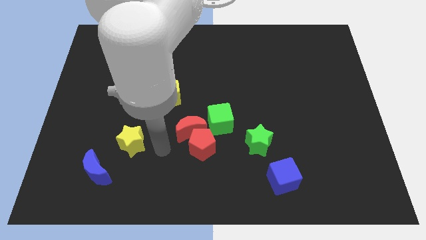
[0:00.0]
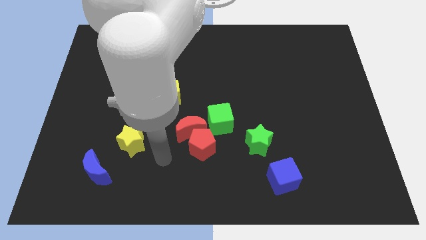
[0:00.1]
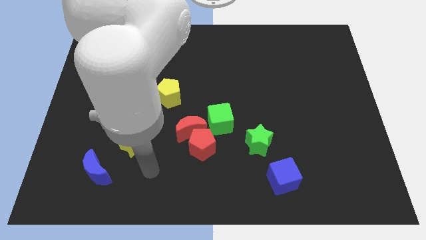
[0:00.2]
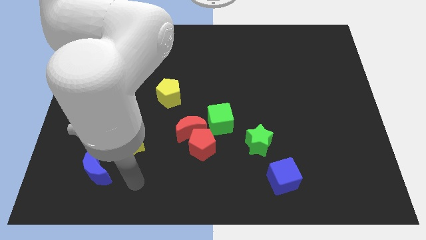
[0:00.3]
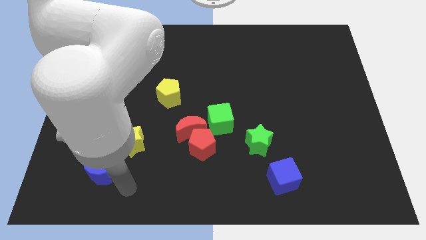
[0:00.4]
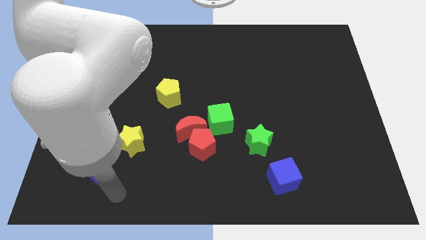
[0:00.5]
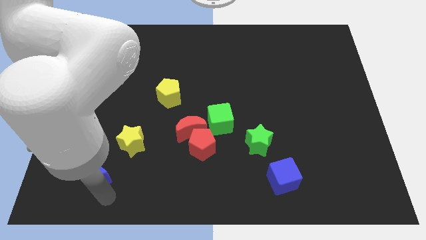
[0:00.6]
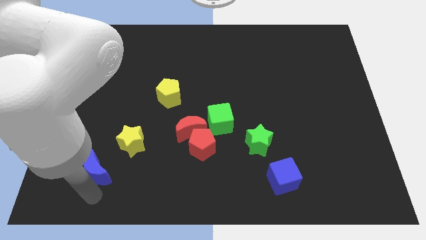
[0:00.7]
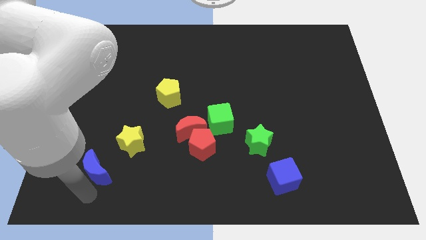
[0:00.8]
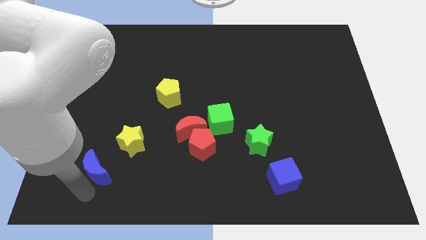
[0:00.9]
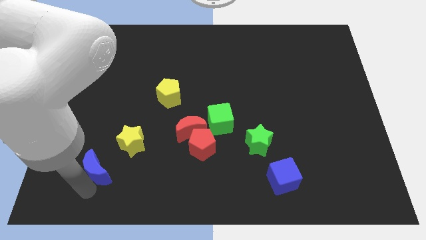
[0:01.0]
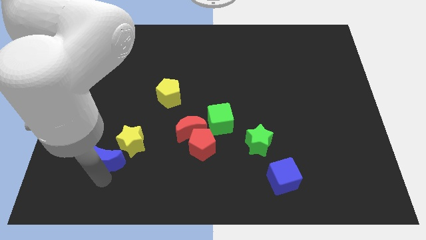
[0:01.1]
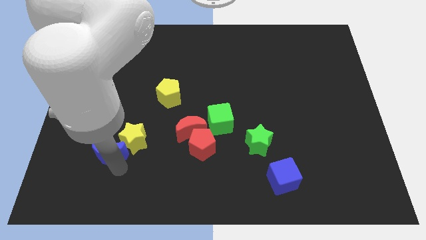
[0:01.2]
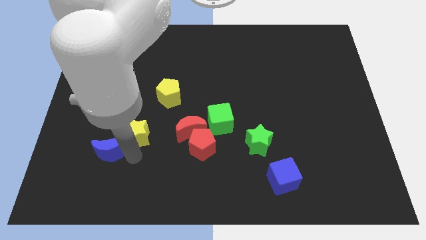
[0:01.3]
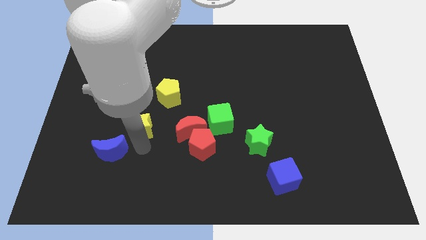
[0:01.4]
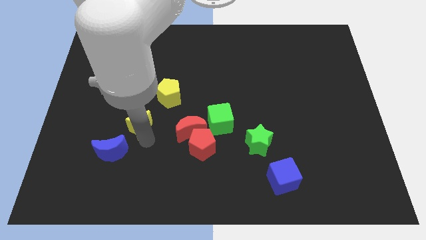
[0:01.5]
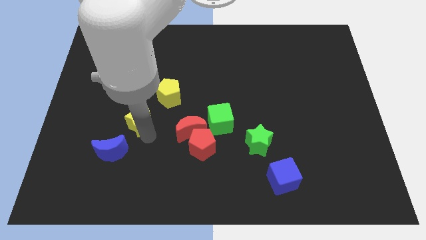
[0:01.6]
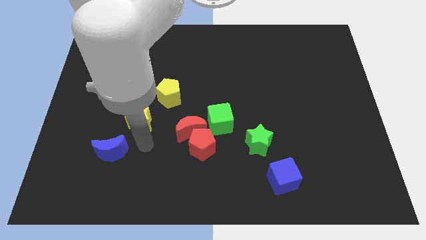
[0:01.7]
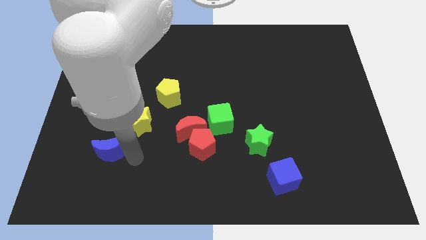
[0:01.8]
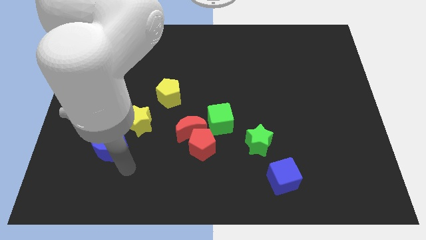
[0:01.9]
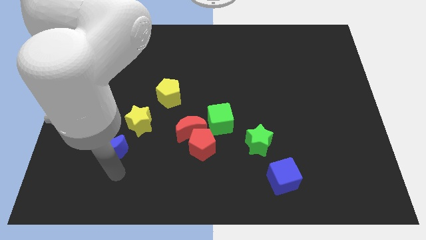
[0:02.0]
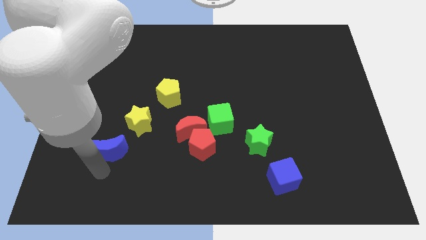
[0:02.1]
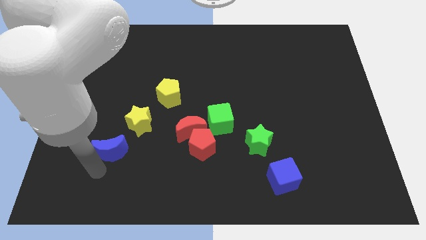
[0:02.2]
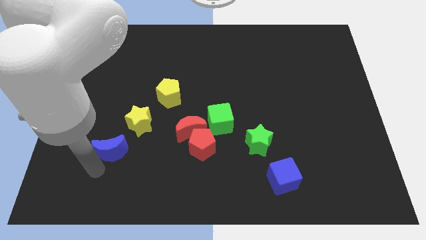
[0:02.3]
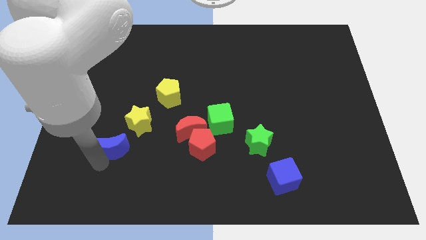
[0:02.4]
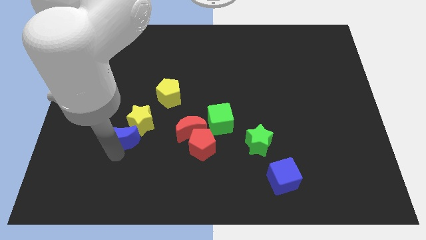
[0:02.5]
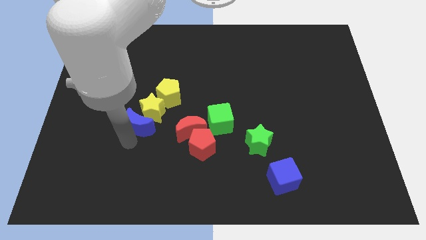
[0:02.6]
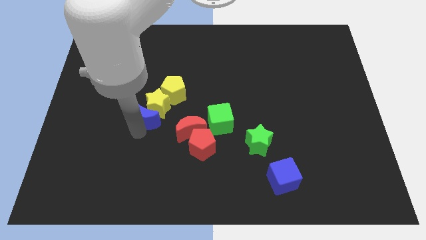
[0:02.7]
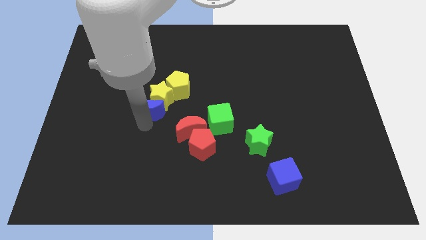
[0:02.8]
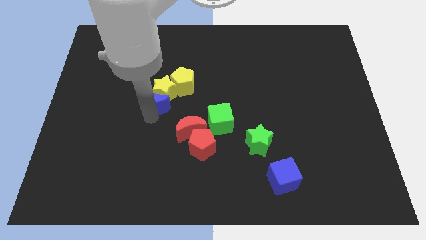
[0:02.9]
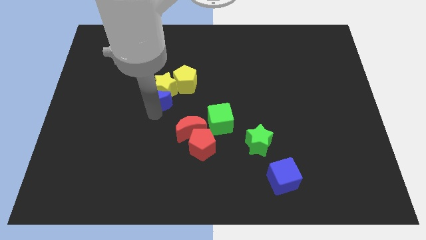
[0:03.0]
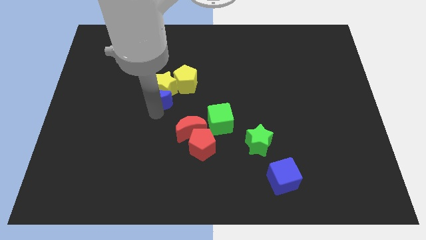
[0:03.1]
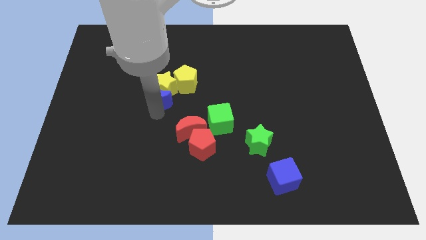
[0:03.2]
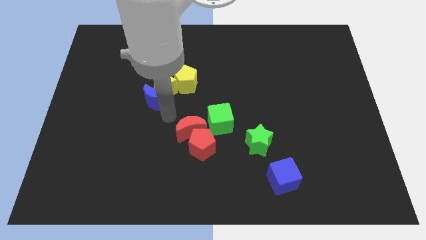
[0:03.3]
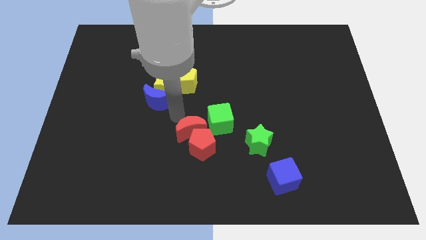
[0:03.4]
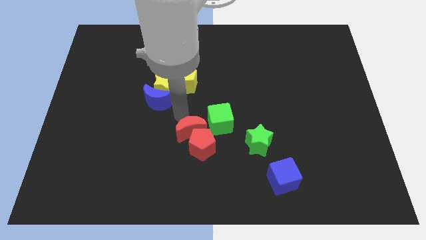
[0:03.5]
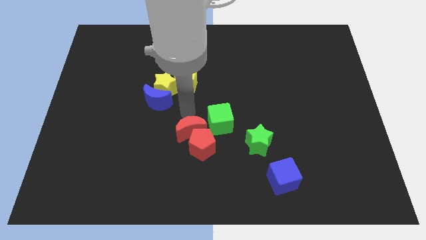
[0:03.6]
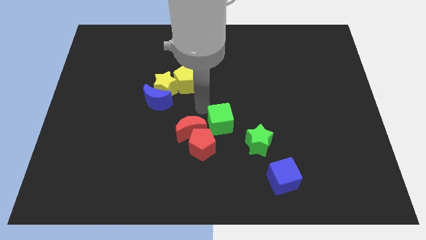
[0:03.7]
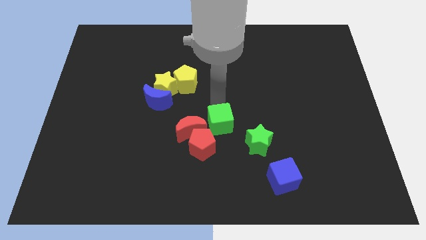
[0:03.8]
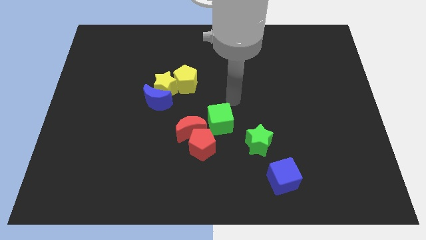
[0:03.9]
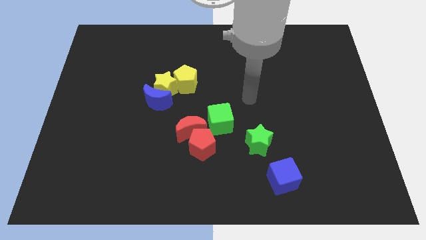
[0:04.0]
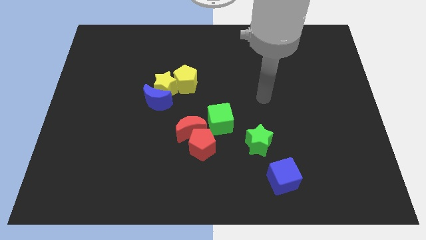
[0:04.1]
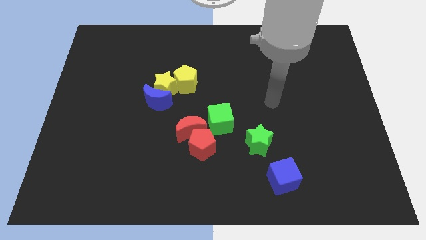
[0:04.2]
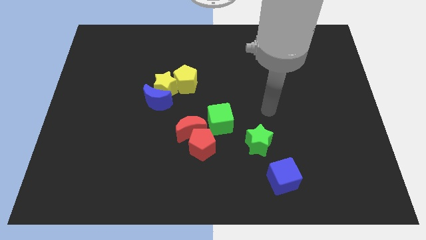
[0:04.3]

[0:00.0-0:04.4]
move the blue crescent and yellow star towards top

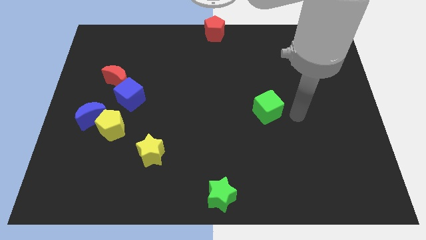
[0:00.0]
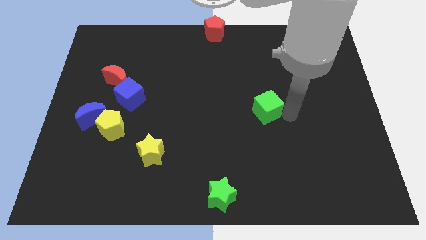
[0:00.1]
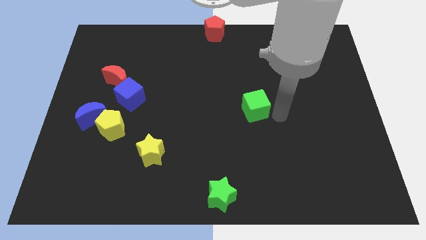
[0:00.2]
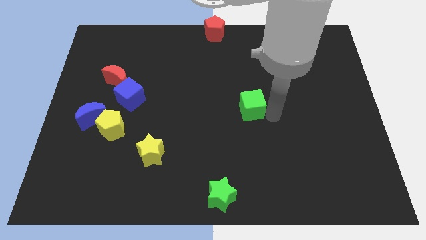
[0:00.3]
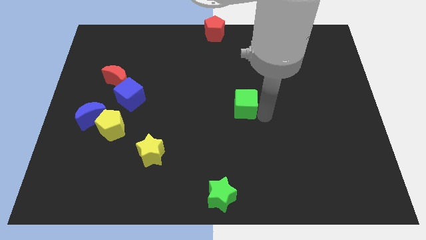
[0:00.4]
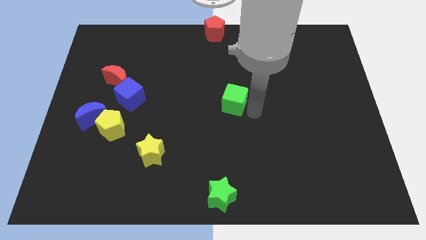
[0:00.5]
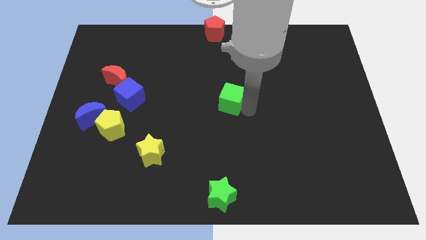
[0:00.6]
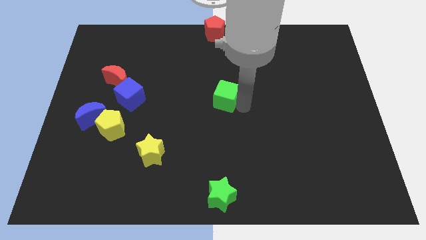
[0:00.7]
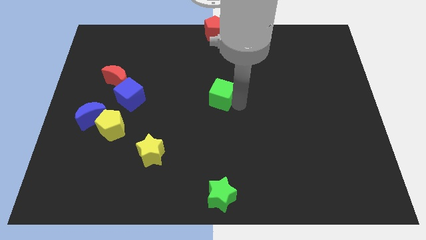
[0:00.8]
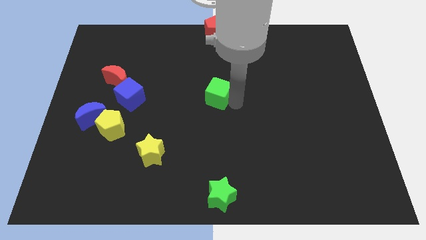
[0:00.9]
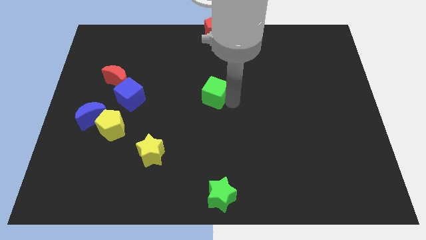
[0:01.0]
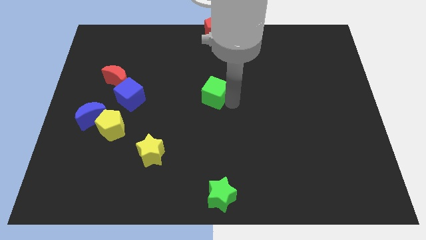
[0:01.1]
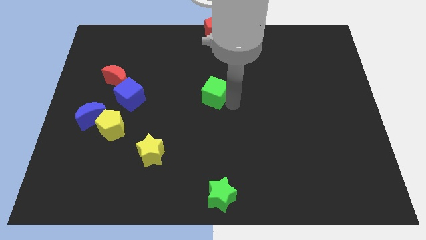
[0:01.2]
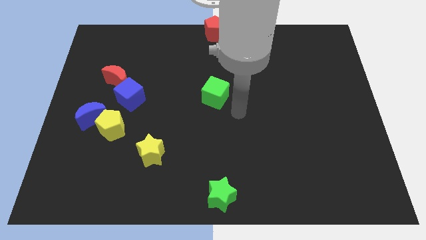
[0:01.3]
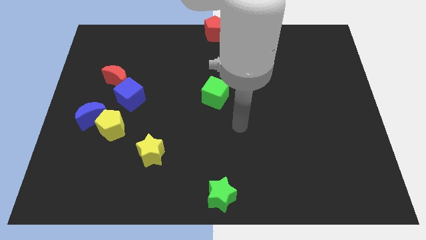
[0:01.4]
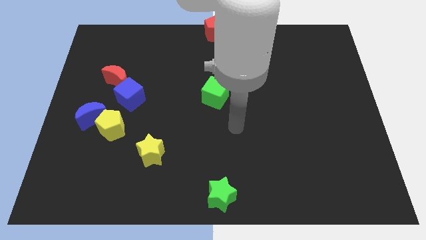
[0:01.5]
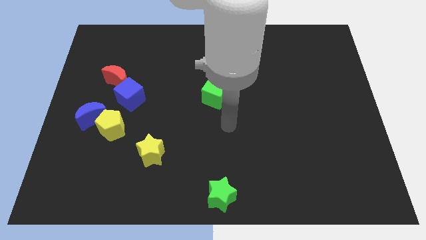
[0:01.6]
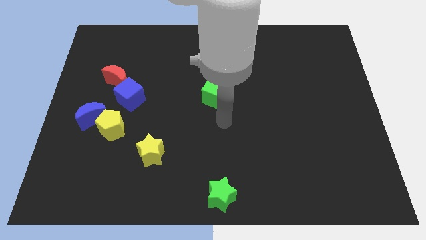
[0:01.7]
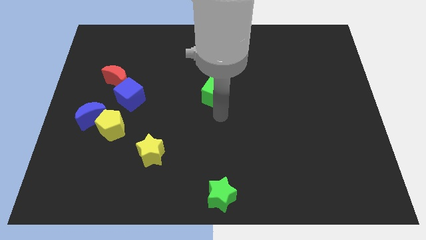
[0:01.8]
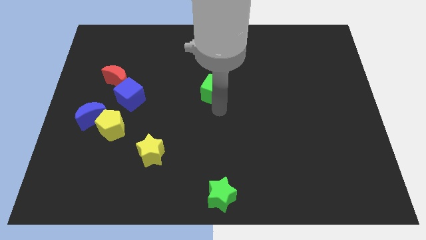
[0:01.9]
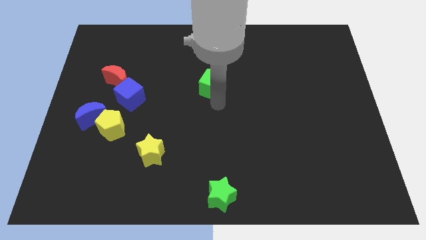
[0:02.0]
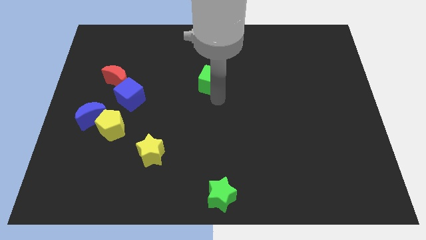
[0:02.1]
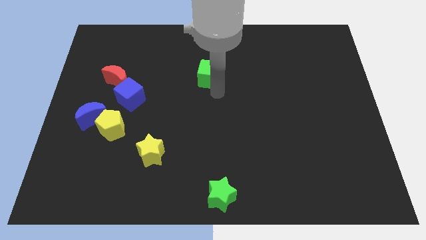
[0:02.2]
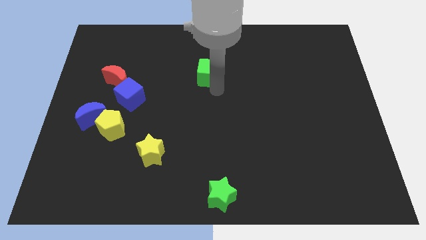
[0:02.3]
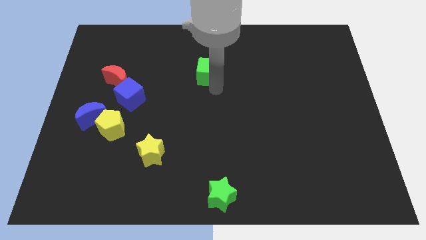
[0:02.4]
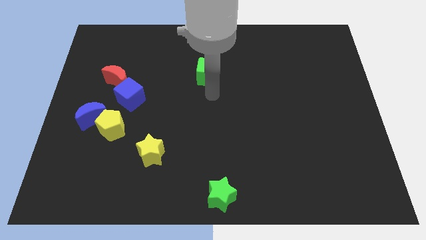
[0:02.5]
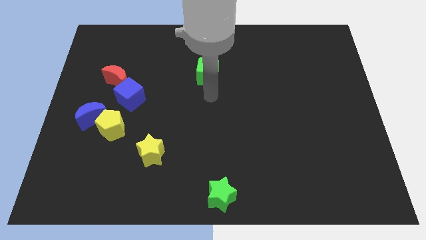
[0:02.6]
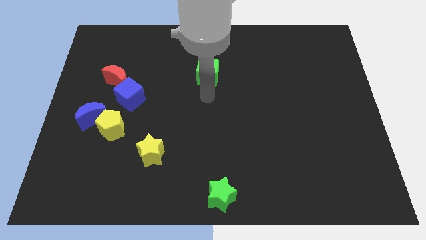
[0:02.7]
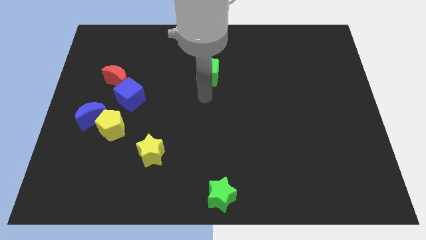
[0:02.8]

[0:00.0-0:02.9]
move the green cube closer to the red pentagon

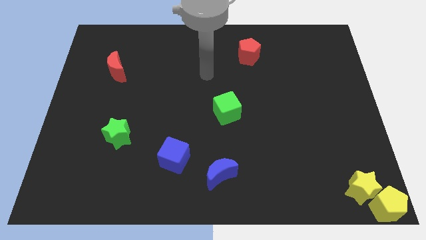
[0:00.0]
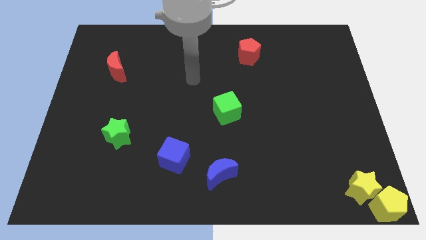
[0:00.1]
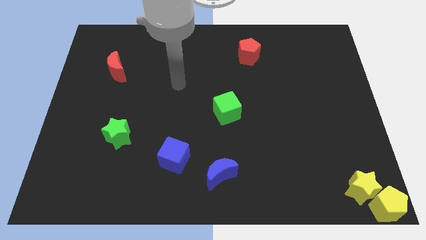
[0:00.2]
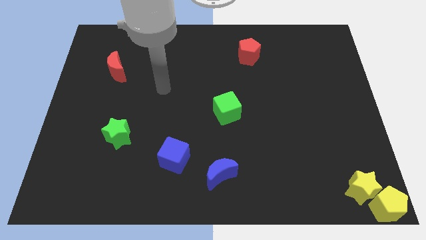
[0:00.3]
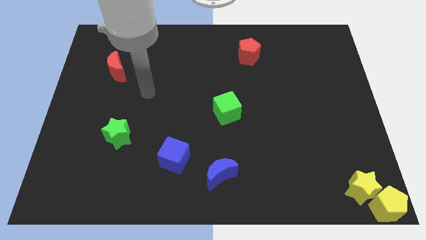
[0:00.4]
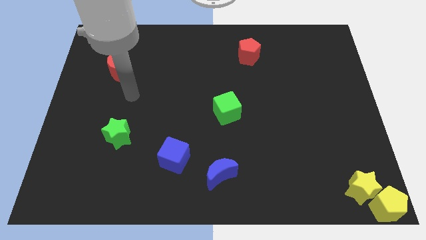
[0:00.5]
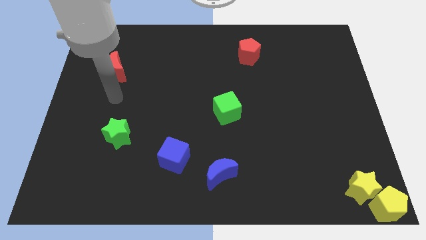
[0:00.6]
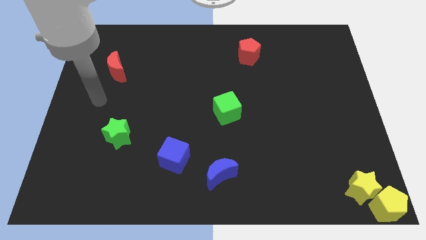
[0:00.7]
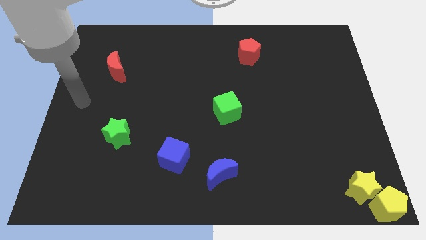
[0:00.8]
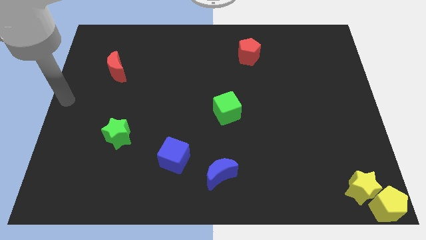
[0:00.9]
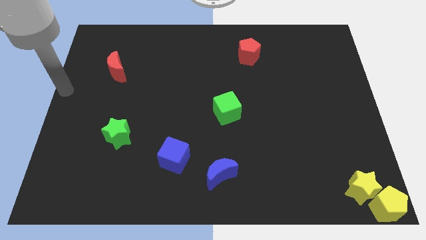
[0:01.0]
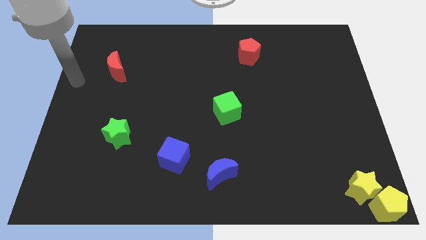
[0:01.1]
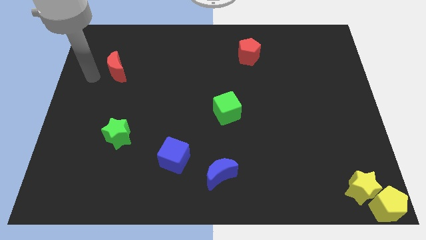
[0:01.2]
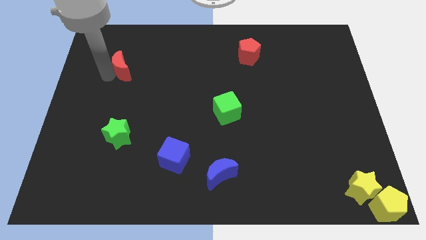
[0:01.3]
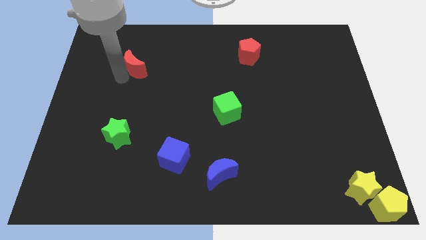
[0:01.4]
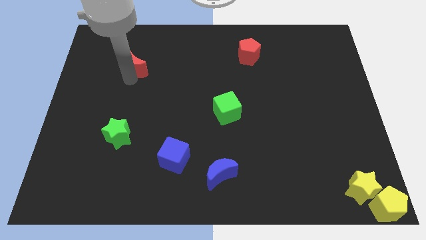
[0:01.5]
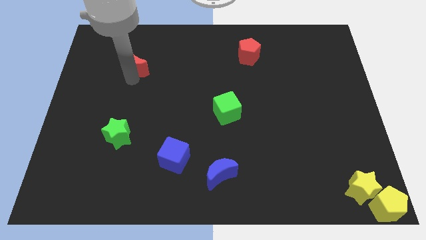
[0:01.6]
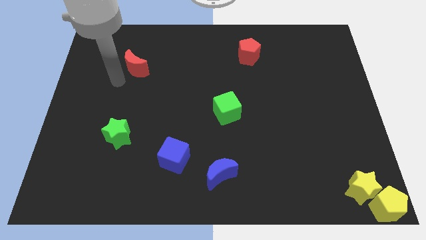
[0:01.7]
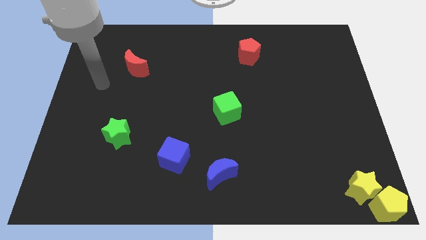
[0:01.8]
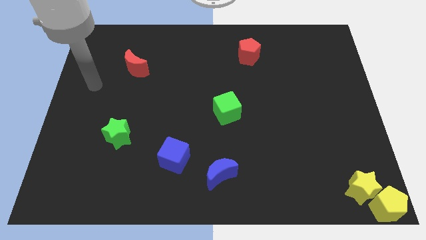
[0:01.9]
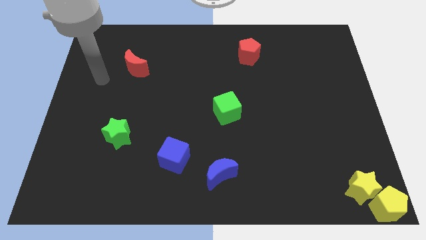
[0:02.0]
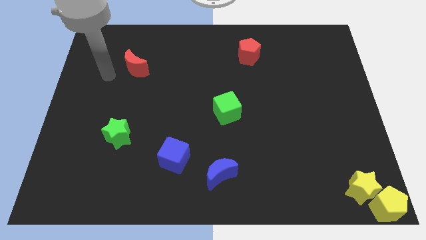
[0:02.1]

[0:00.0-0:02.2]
place the red moon diagonally to green cube
